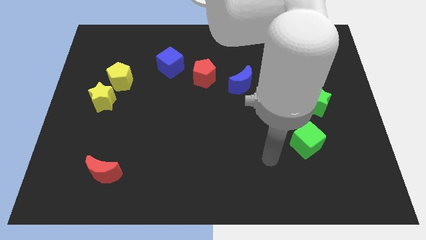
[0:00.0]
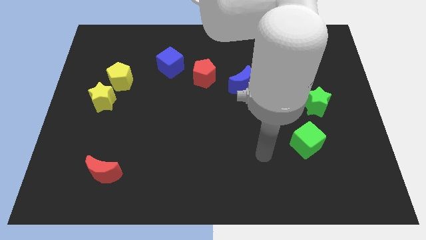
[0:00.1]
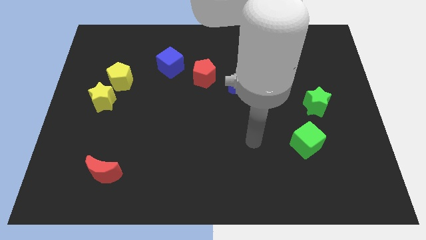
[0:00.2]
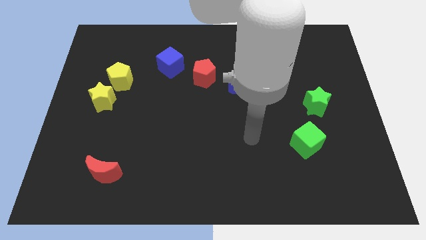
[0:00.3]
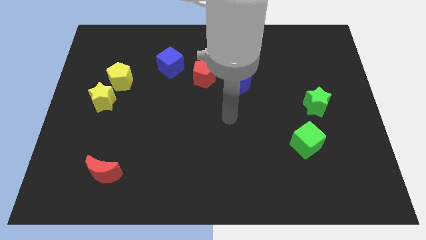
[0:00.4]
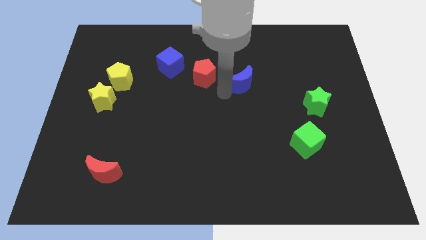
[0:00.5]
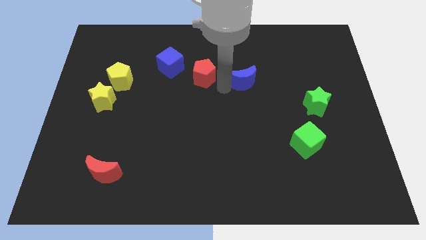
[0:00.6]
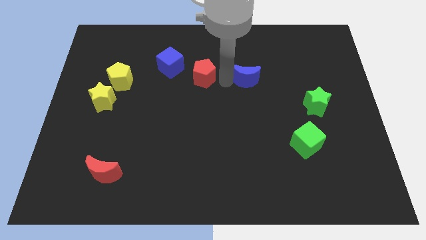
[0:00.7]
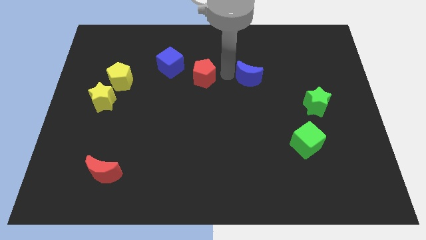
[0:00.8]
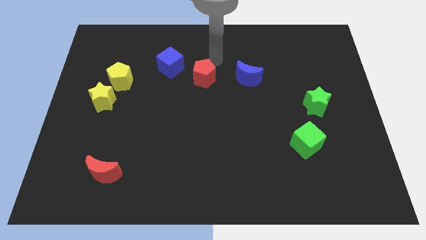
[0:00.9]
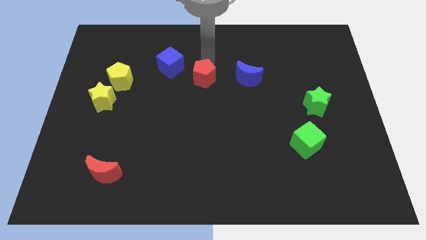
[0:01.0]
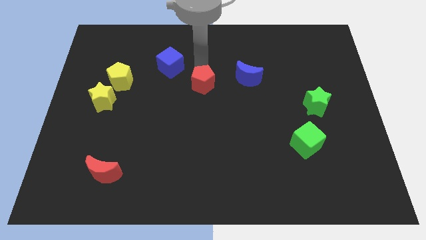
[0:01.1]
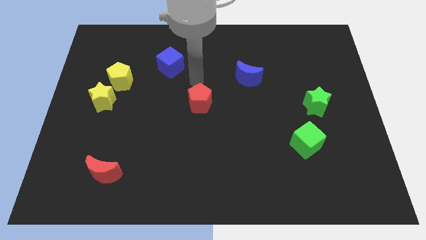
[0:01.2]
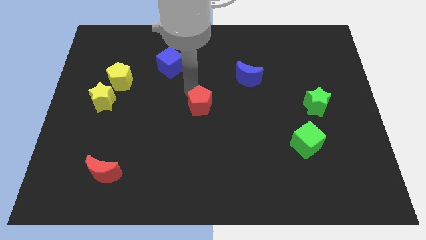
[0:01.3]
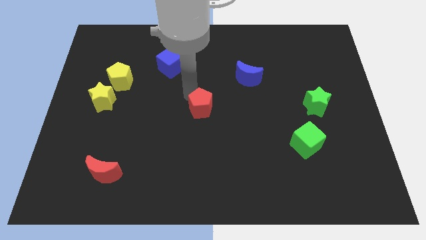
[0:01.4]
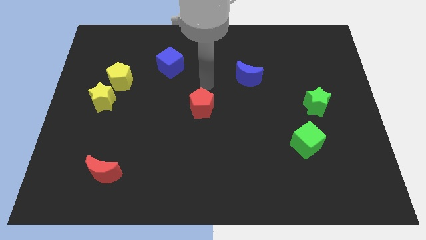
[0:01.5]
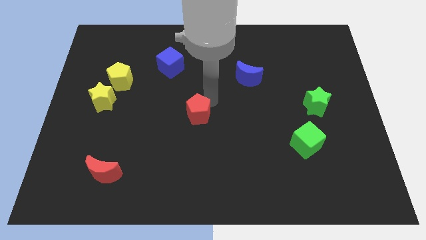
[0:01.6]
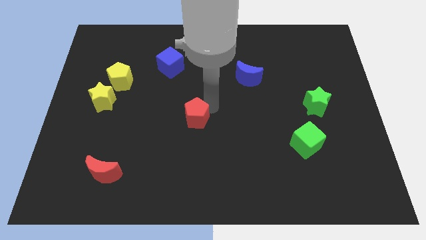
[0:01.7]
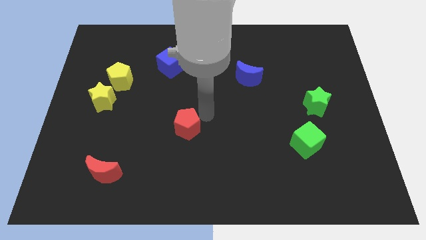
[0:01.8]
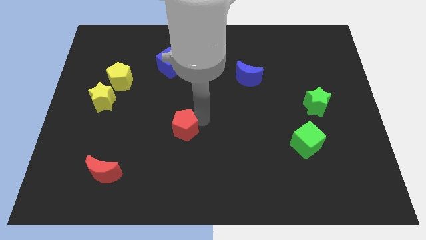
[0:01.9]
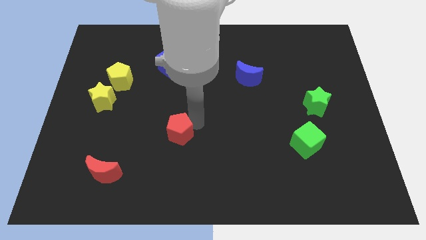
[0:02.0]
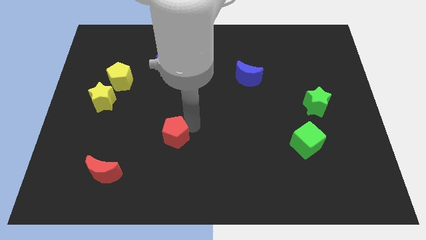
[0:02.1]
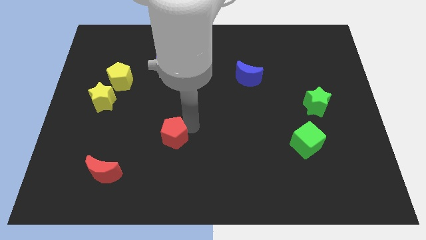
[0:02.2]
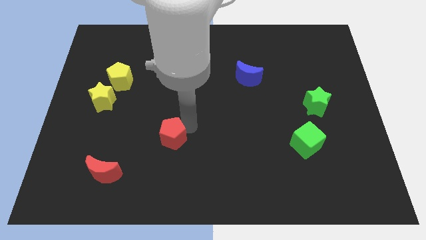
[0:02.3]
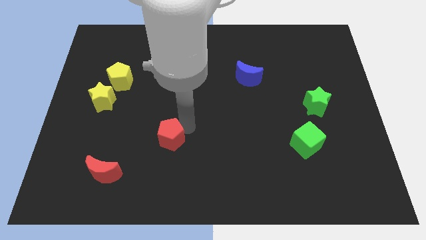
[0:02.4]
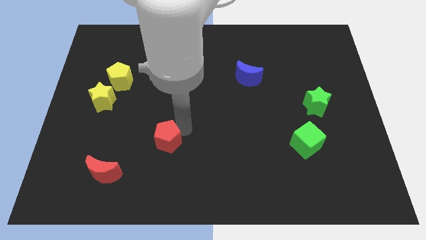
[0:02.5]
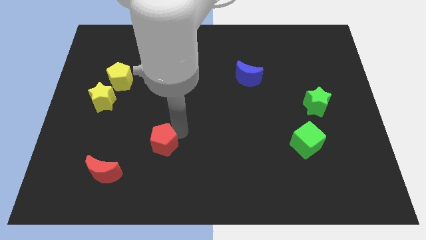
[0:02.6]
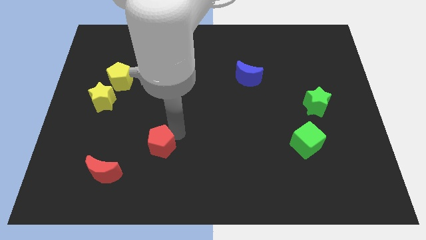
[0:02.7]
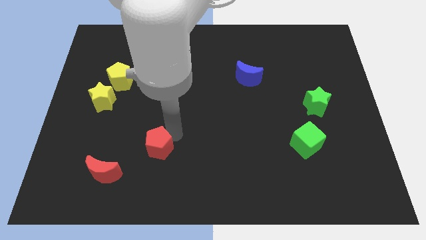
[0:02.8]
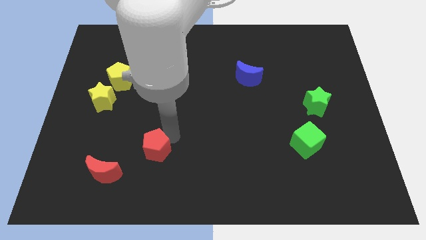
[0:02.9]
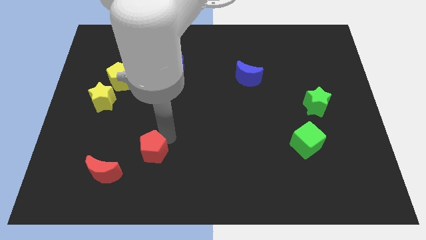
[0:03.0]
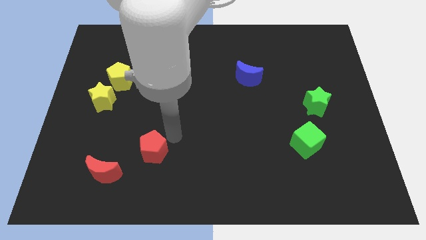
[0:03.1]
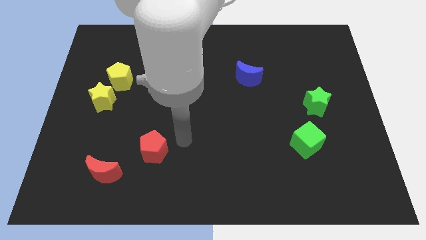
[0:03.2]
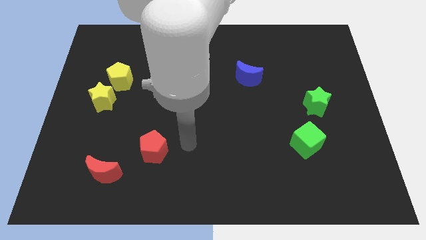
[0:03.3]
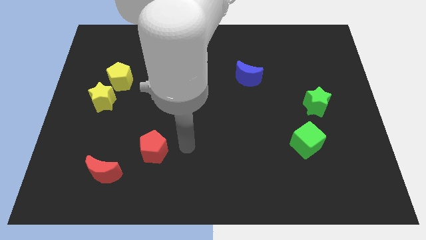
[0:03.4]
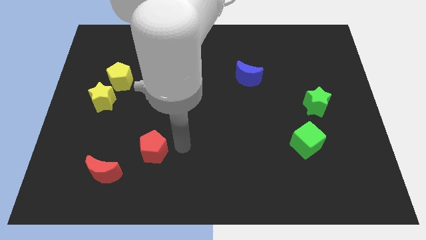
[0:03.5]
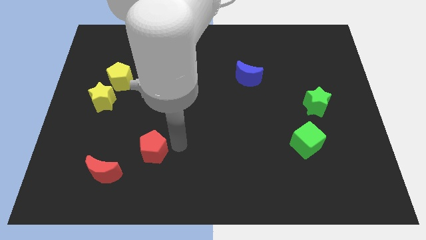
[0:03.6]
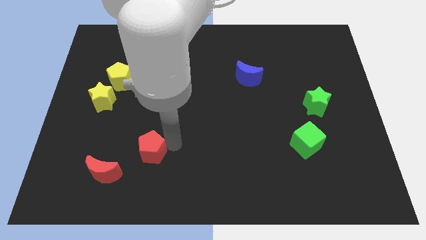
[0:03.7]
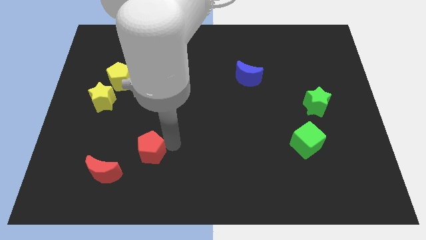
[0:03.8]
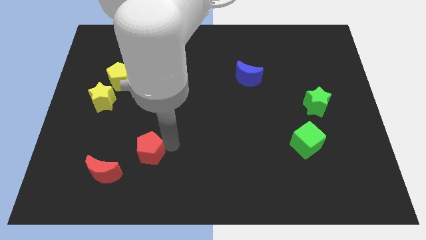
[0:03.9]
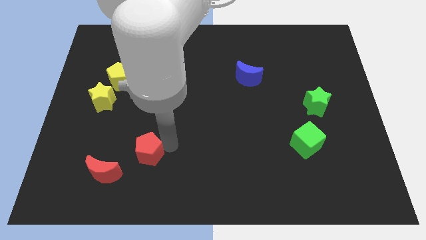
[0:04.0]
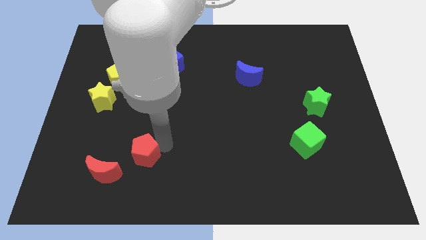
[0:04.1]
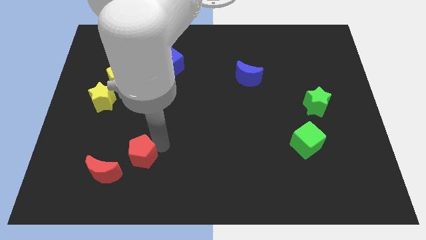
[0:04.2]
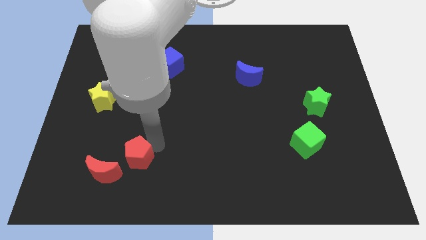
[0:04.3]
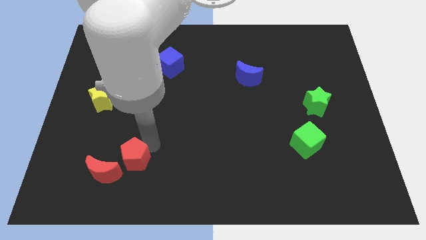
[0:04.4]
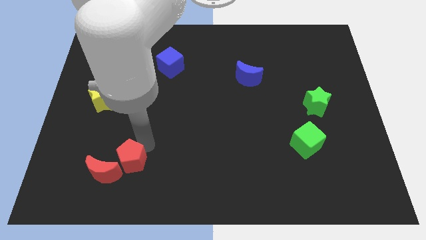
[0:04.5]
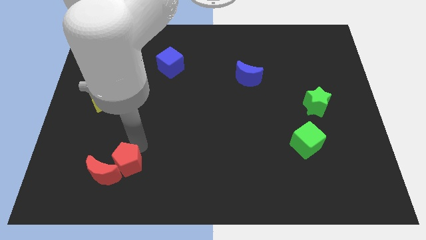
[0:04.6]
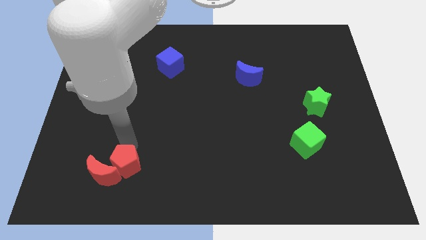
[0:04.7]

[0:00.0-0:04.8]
move the red pentagon towards the red moon

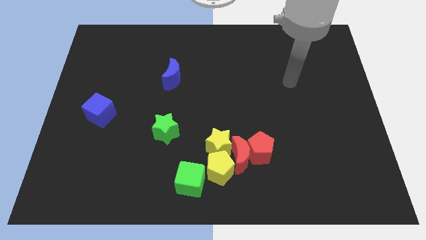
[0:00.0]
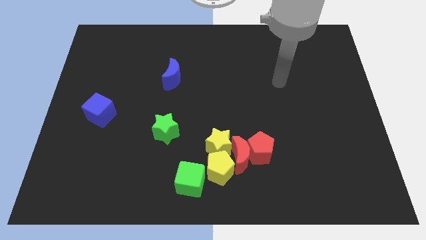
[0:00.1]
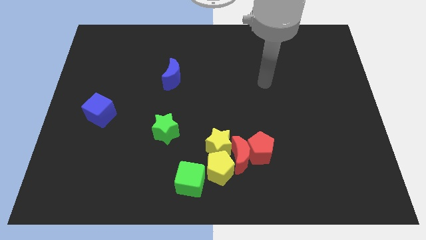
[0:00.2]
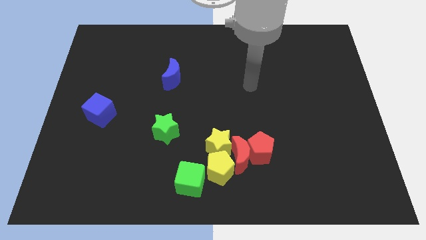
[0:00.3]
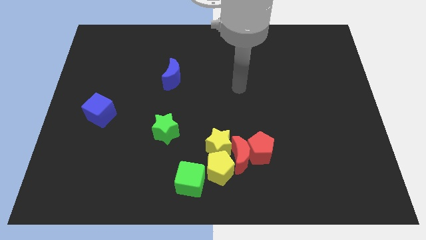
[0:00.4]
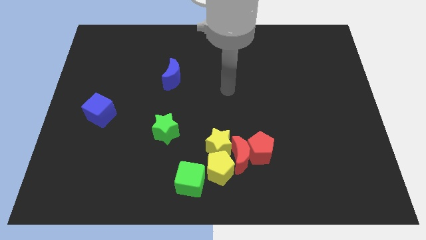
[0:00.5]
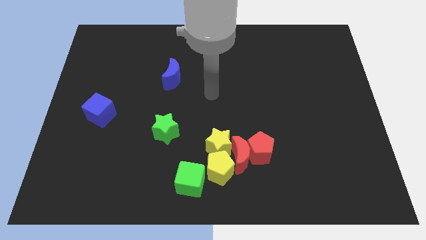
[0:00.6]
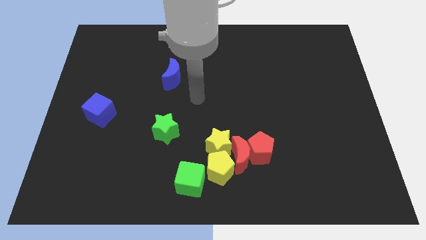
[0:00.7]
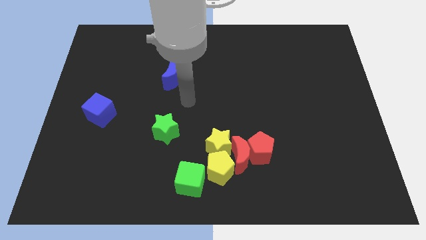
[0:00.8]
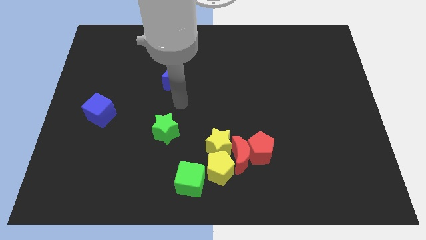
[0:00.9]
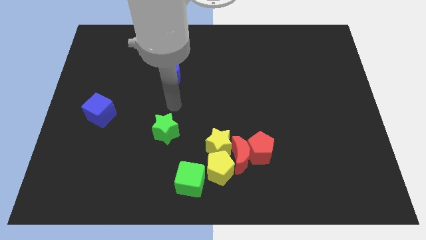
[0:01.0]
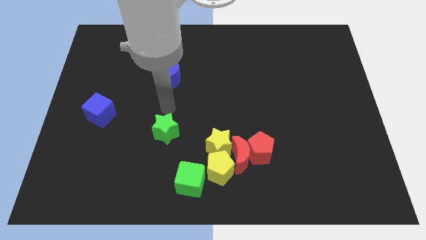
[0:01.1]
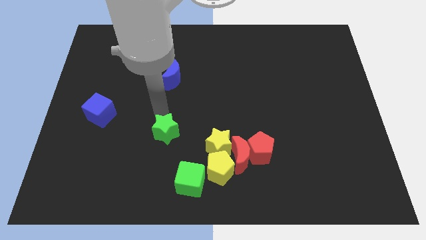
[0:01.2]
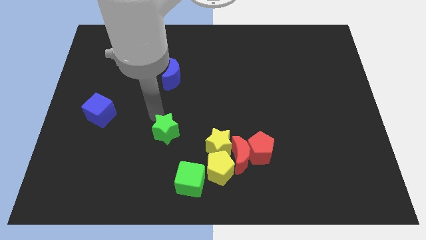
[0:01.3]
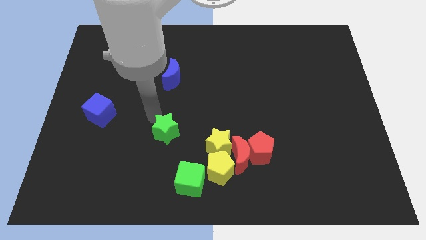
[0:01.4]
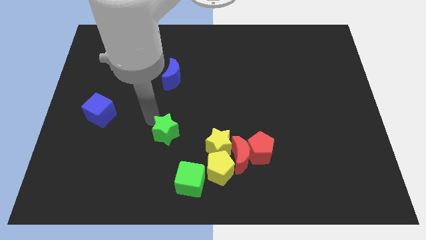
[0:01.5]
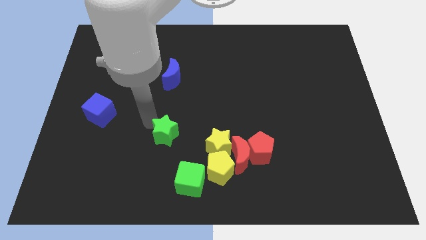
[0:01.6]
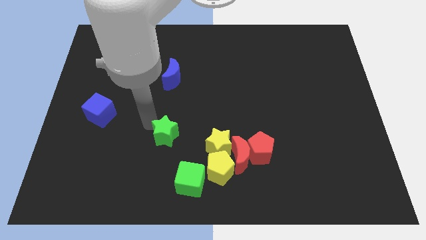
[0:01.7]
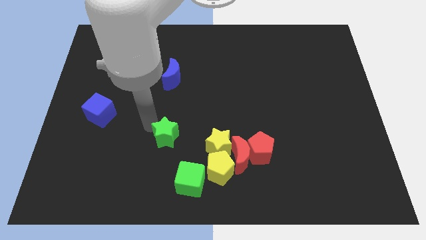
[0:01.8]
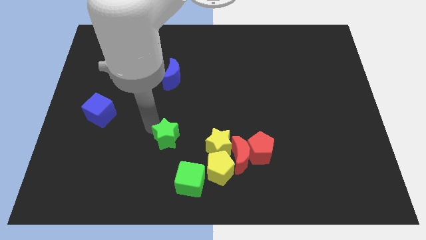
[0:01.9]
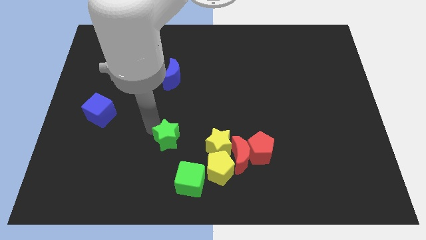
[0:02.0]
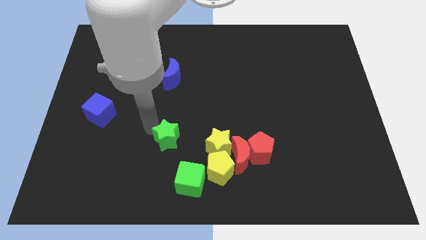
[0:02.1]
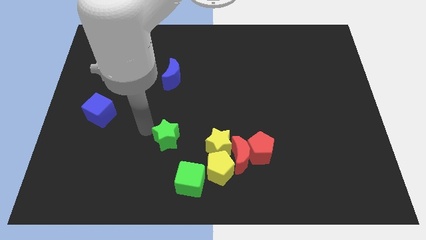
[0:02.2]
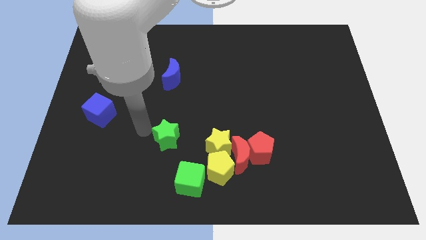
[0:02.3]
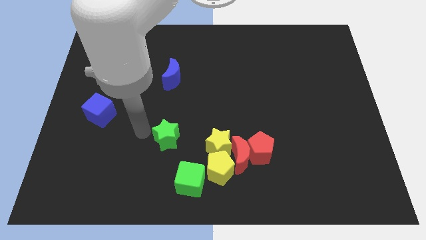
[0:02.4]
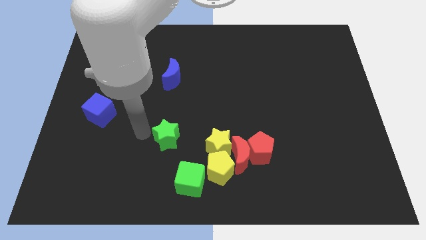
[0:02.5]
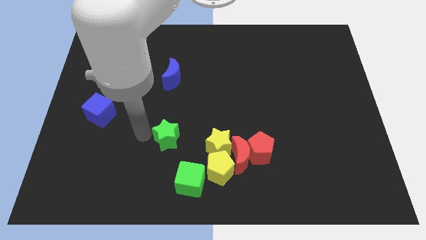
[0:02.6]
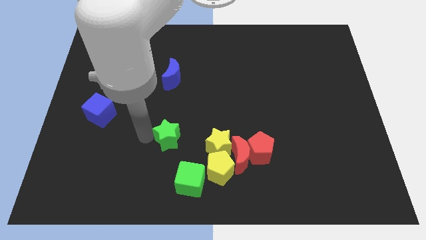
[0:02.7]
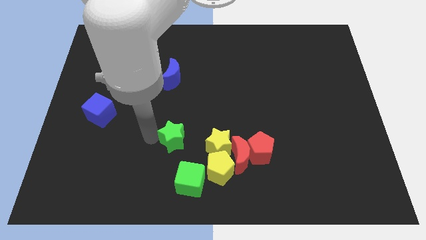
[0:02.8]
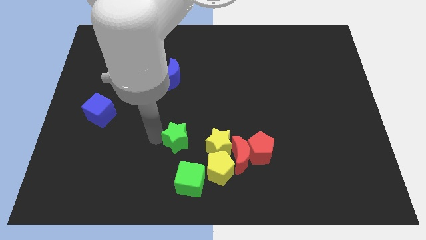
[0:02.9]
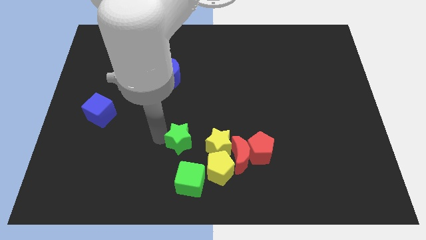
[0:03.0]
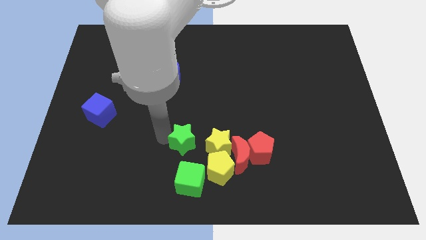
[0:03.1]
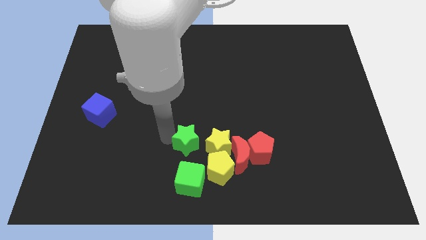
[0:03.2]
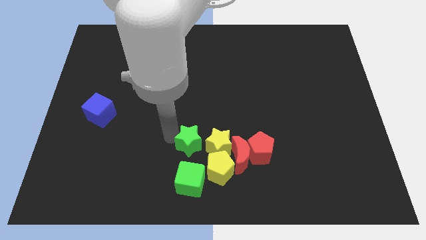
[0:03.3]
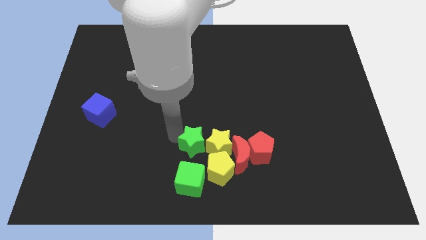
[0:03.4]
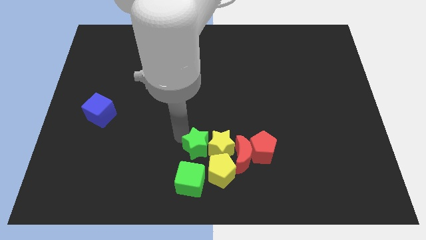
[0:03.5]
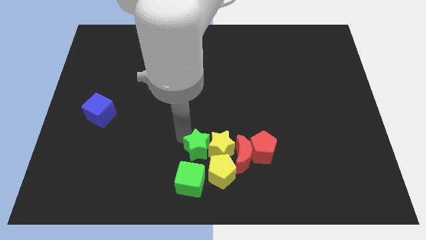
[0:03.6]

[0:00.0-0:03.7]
move the green star next to the yellow star
